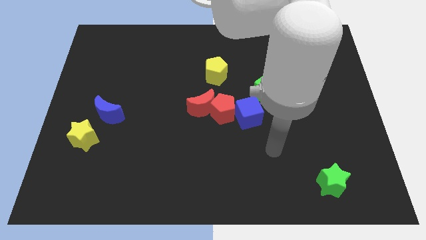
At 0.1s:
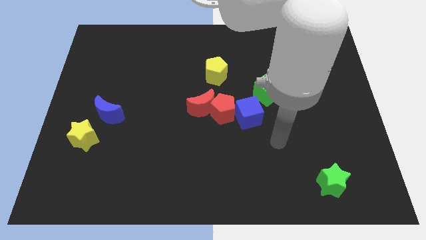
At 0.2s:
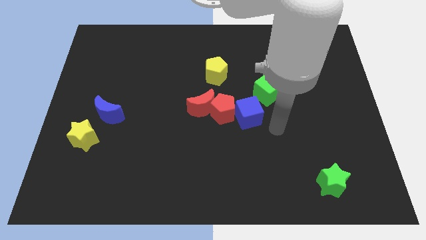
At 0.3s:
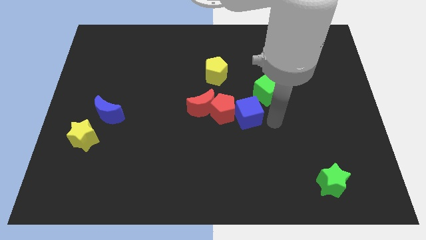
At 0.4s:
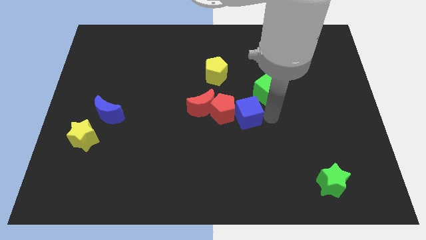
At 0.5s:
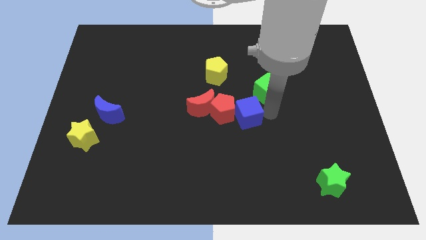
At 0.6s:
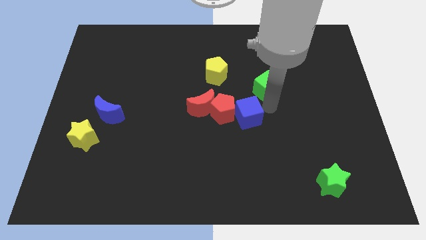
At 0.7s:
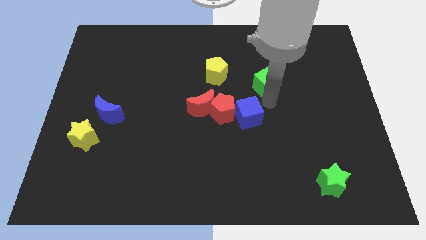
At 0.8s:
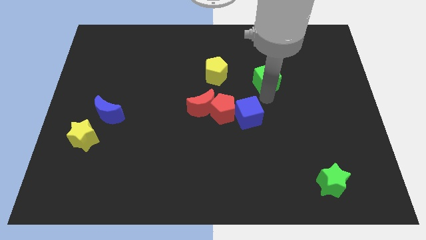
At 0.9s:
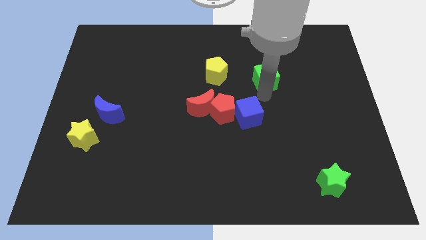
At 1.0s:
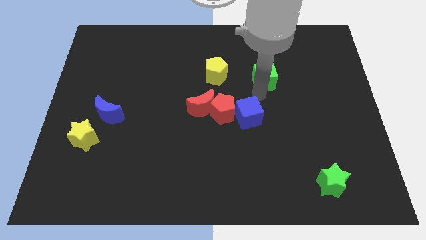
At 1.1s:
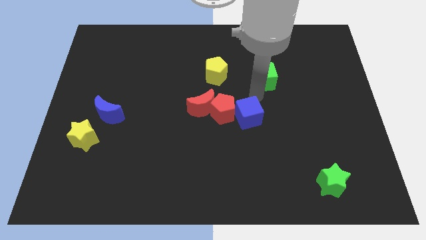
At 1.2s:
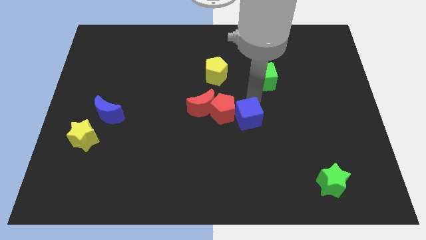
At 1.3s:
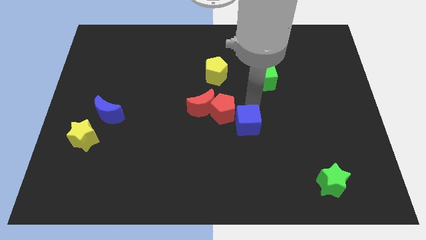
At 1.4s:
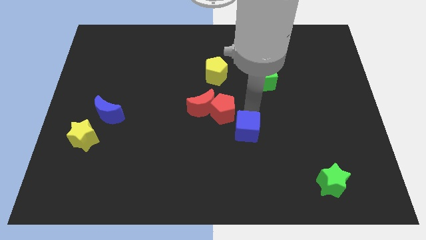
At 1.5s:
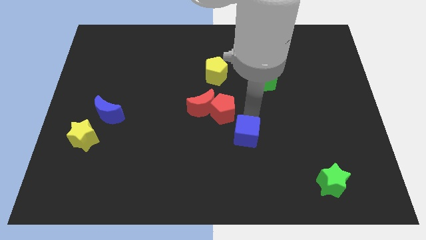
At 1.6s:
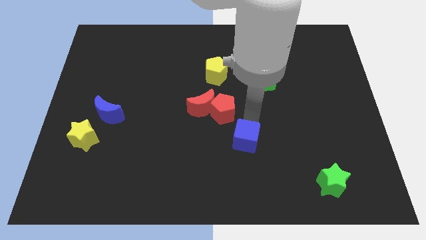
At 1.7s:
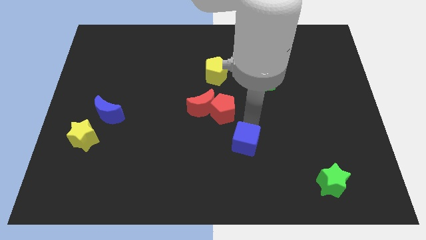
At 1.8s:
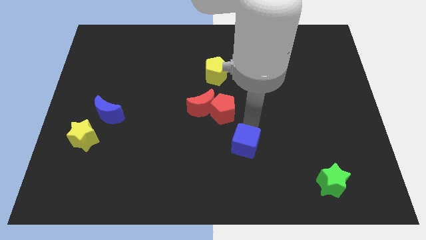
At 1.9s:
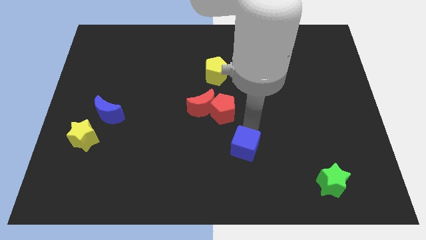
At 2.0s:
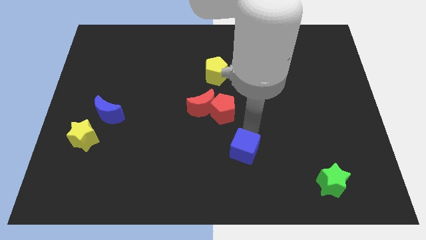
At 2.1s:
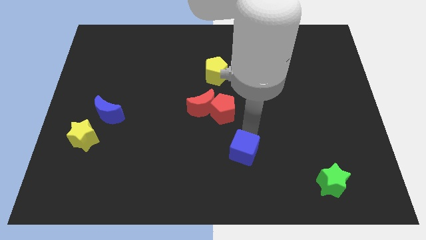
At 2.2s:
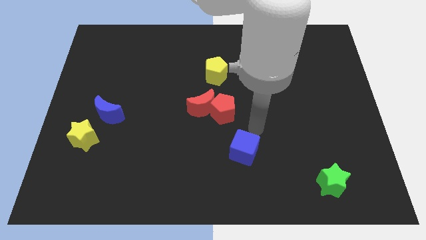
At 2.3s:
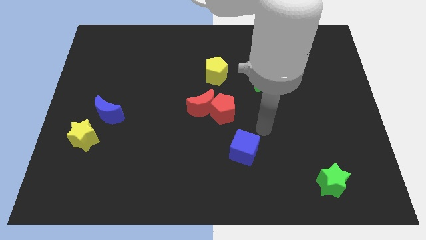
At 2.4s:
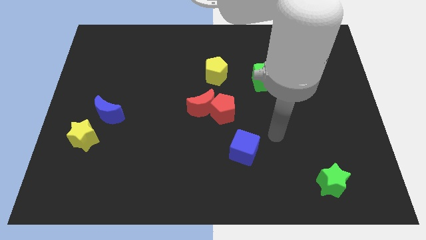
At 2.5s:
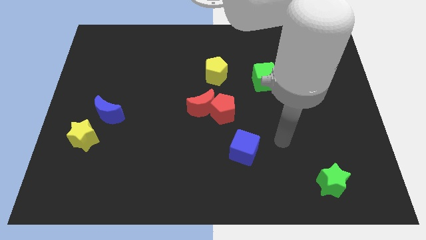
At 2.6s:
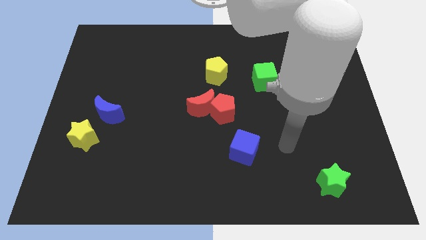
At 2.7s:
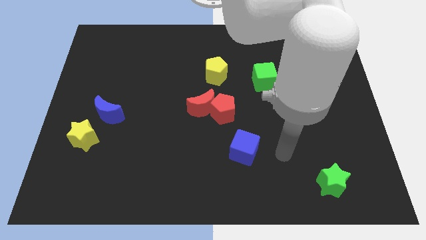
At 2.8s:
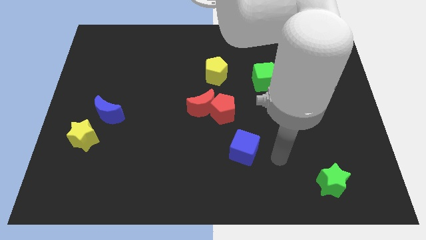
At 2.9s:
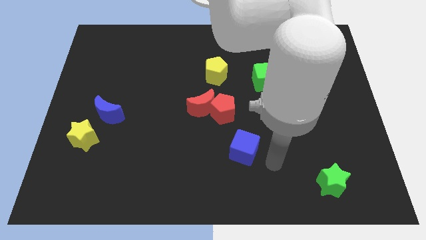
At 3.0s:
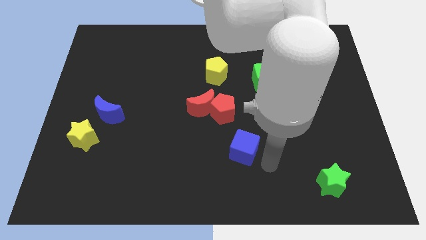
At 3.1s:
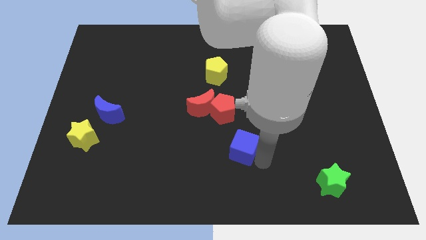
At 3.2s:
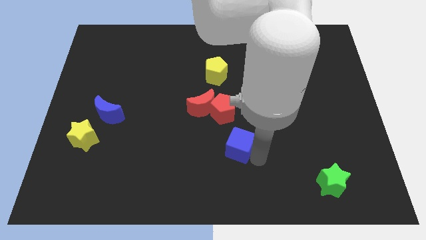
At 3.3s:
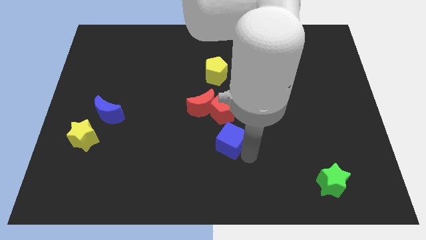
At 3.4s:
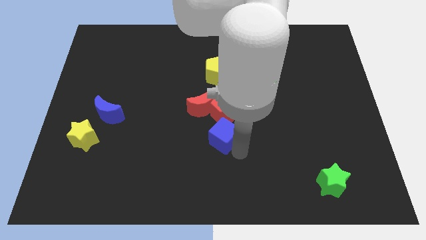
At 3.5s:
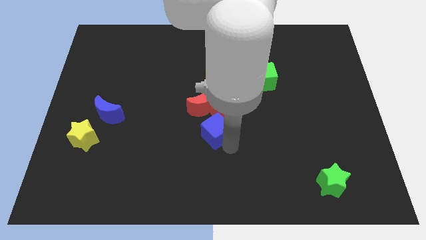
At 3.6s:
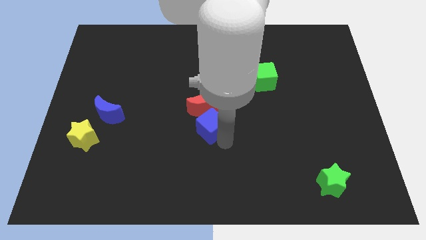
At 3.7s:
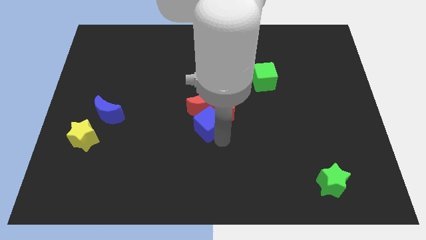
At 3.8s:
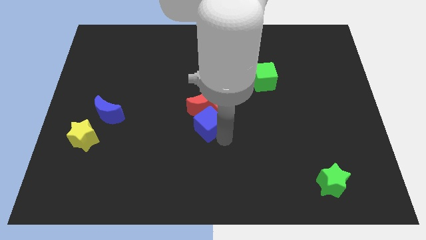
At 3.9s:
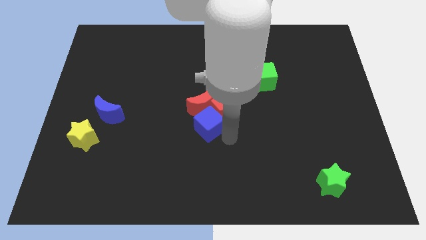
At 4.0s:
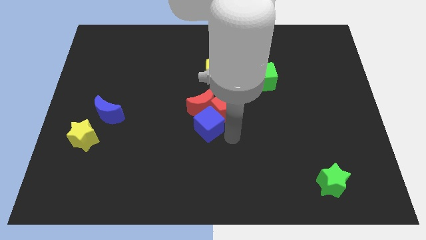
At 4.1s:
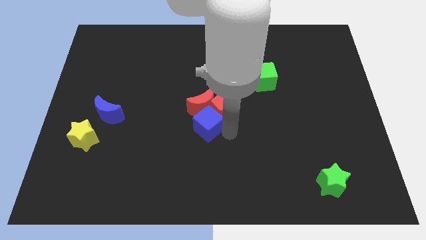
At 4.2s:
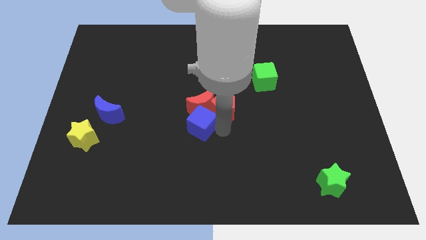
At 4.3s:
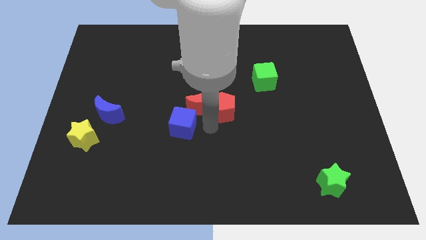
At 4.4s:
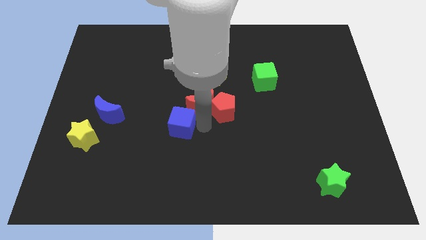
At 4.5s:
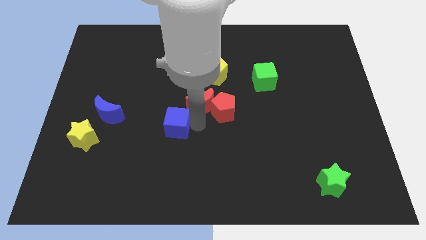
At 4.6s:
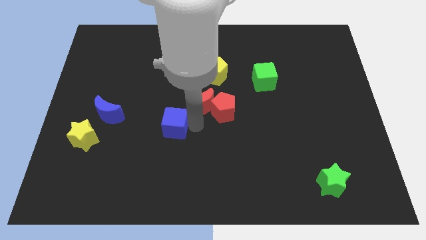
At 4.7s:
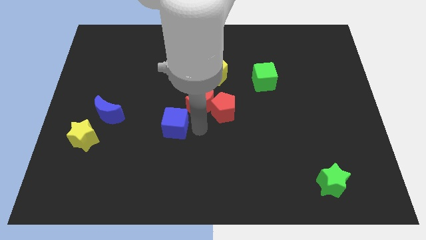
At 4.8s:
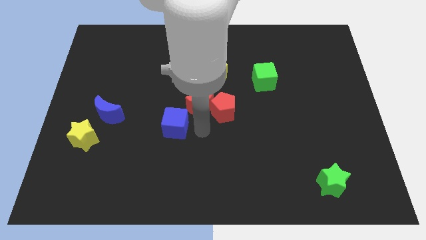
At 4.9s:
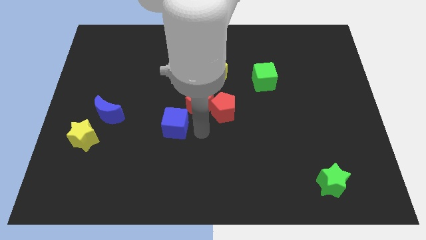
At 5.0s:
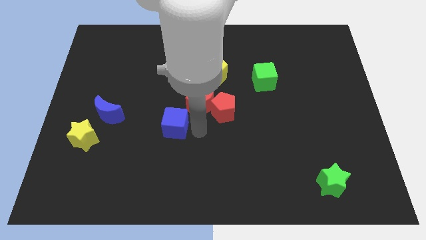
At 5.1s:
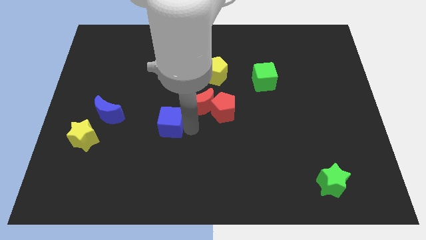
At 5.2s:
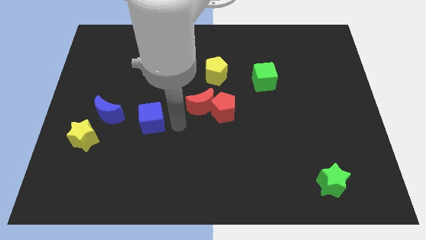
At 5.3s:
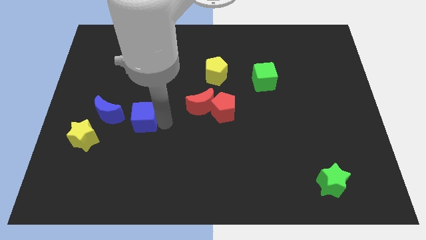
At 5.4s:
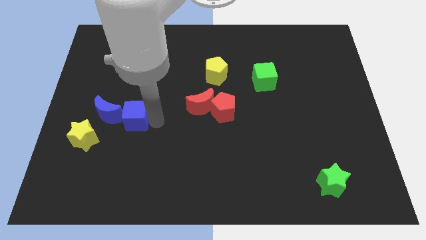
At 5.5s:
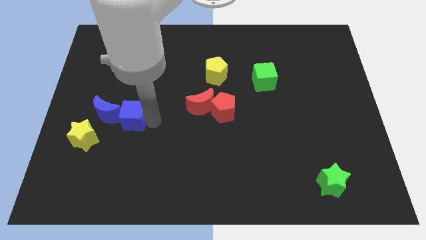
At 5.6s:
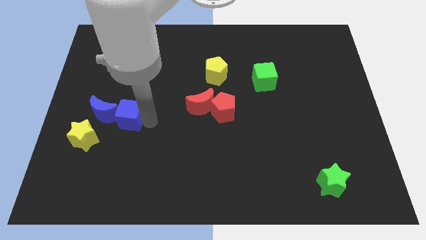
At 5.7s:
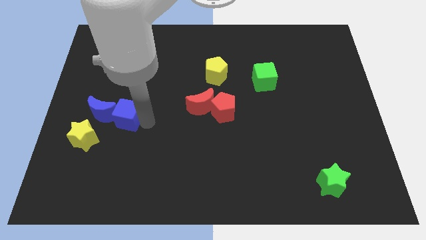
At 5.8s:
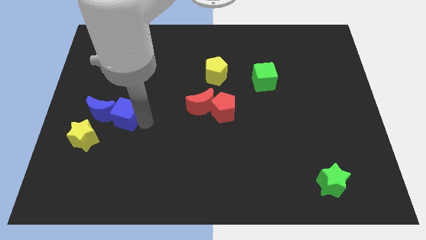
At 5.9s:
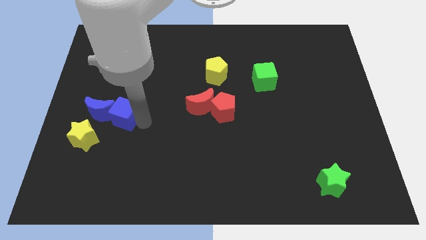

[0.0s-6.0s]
put the blue cube close to the blue moon

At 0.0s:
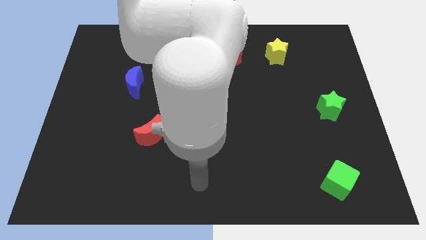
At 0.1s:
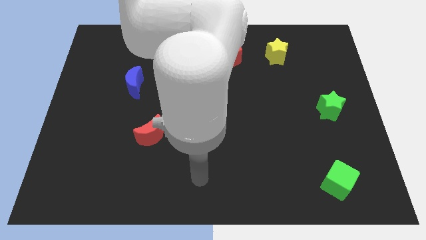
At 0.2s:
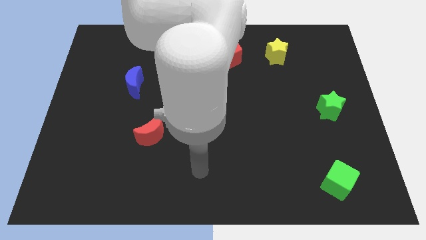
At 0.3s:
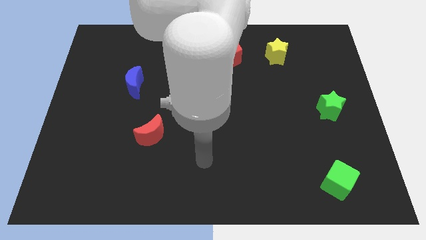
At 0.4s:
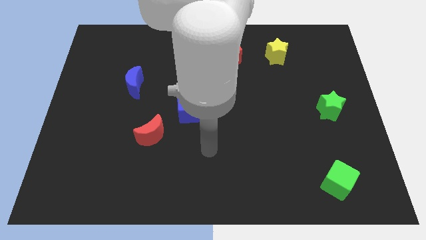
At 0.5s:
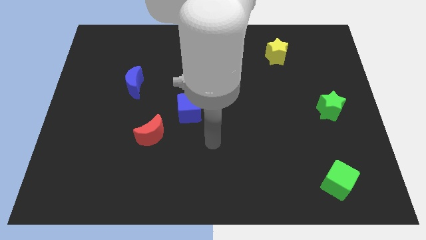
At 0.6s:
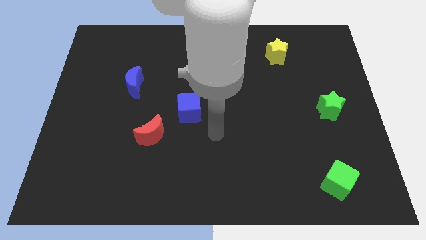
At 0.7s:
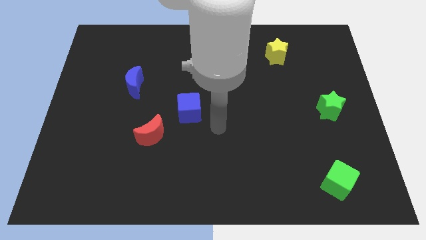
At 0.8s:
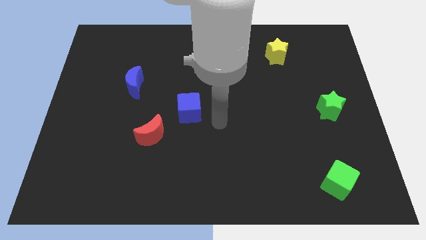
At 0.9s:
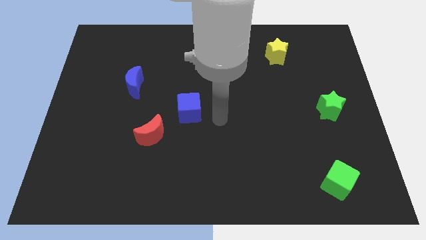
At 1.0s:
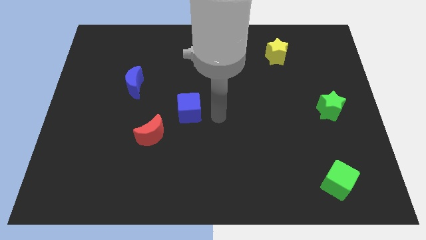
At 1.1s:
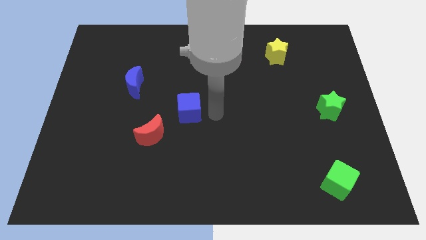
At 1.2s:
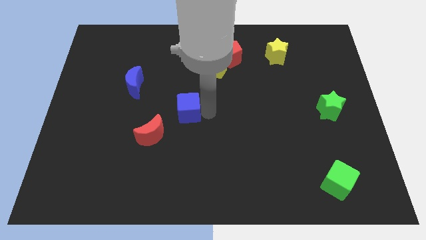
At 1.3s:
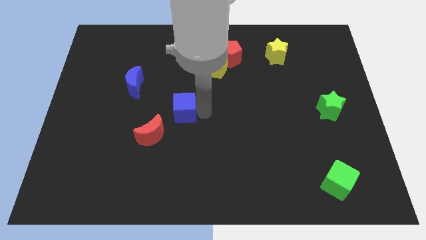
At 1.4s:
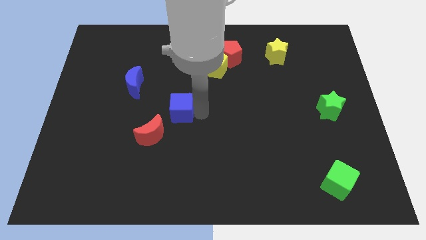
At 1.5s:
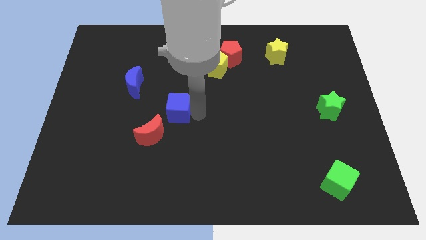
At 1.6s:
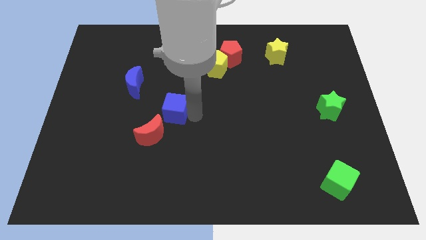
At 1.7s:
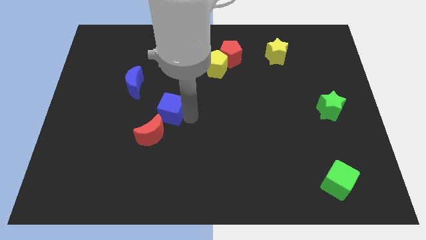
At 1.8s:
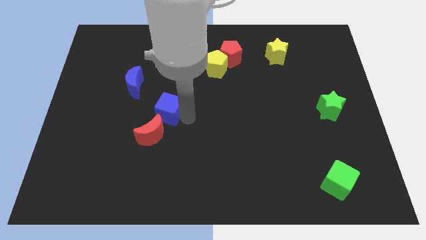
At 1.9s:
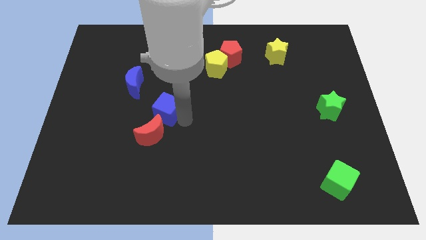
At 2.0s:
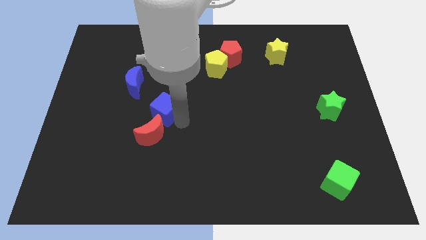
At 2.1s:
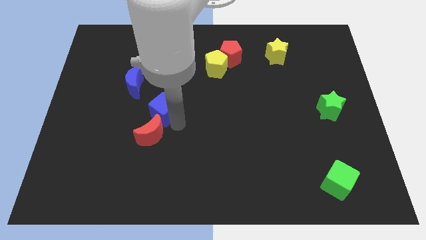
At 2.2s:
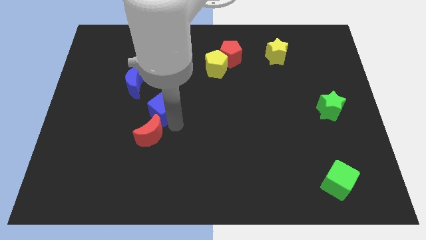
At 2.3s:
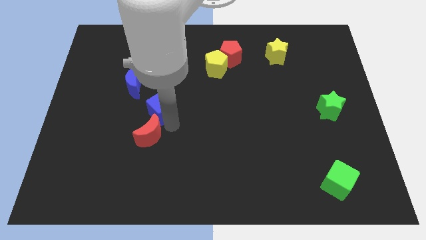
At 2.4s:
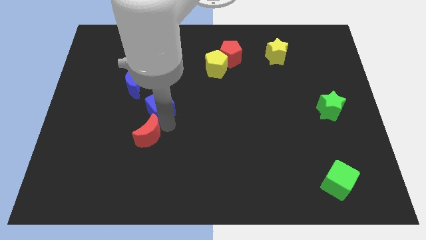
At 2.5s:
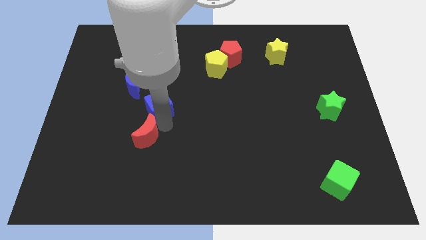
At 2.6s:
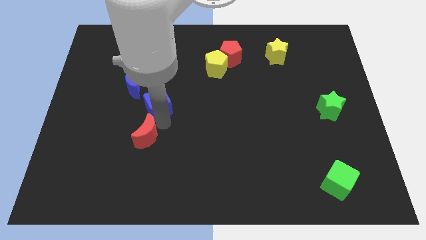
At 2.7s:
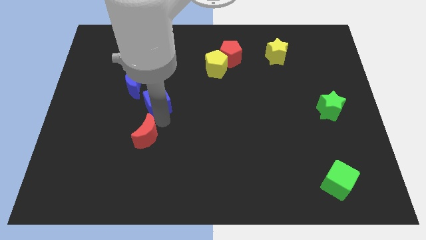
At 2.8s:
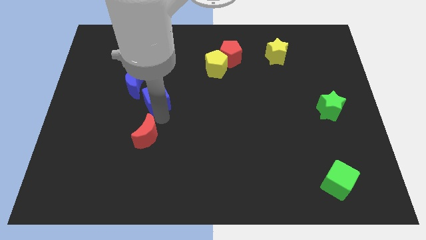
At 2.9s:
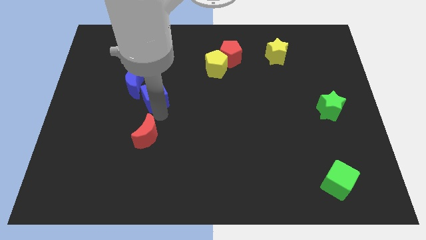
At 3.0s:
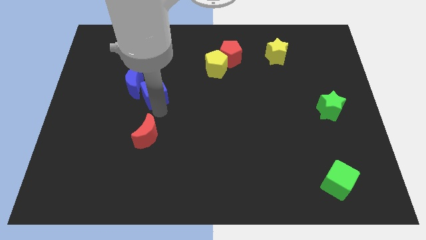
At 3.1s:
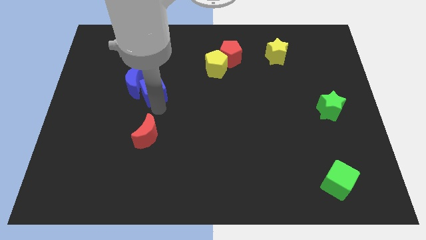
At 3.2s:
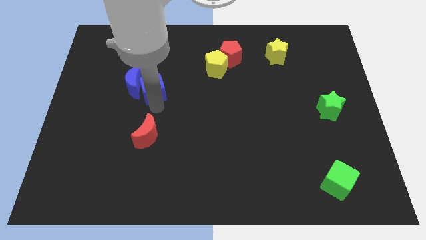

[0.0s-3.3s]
push the blue cube to the blue moon
